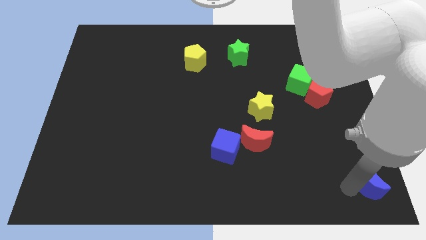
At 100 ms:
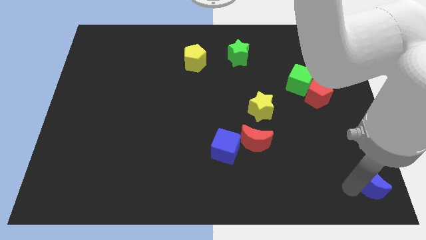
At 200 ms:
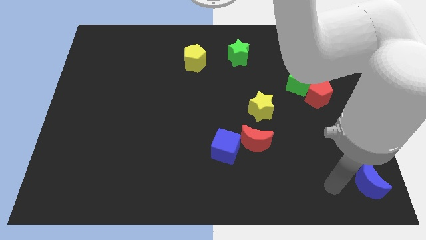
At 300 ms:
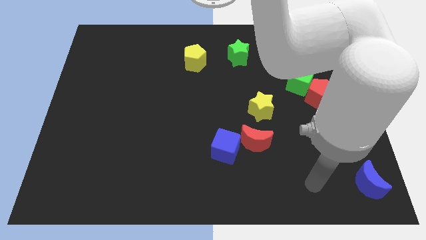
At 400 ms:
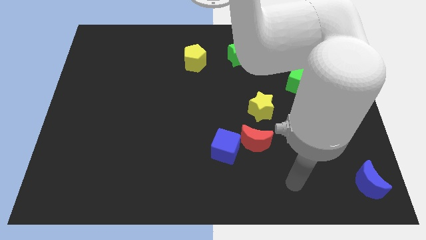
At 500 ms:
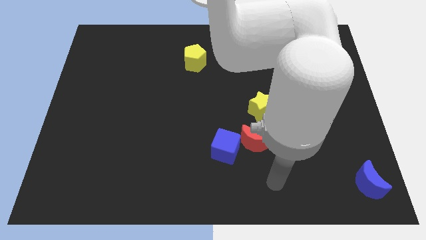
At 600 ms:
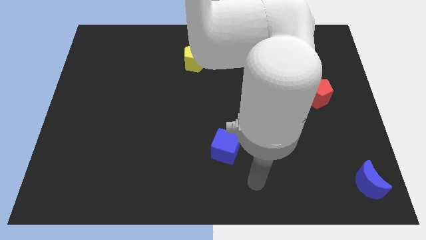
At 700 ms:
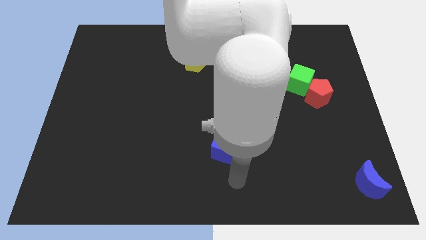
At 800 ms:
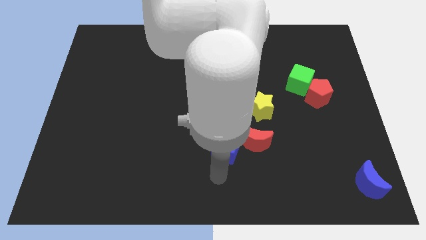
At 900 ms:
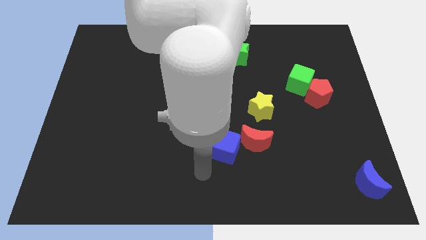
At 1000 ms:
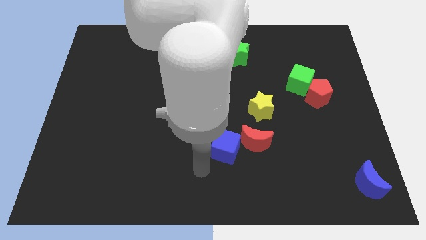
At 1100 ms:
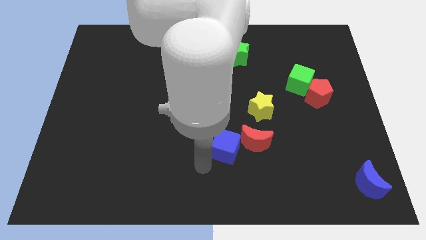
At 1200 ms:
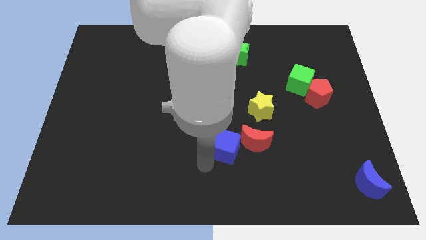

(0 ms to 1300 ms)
move your hand away from the blue moon

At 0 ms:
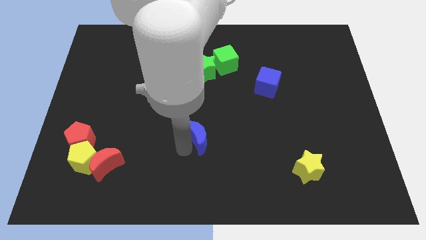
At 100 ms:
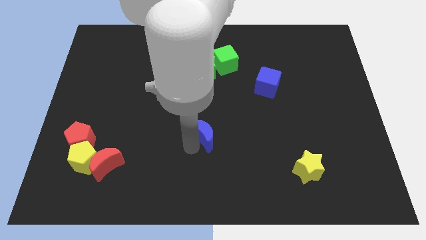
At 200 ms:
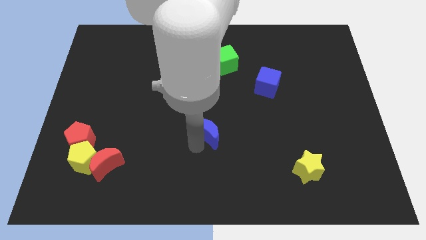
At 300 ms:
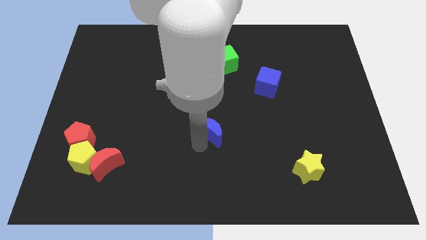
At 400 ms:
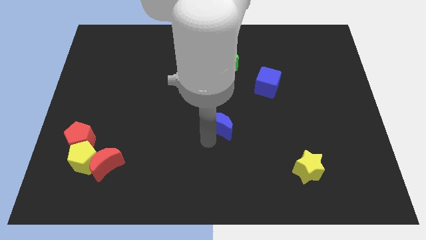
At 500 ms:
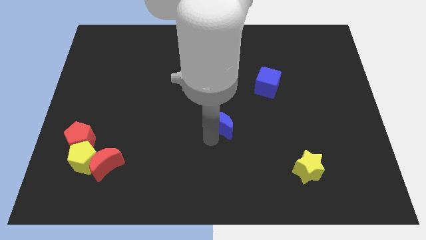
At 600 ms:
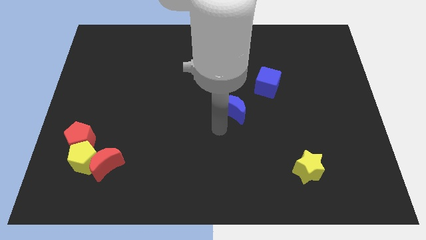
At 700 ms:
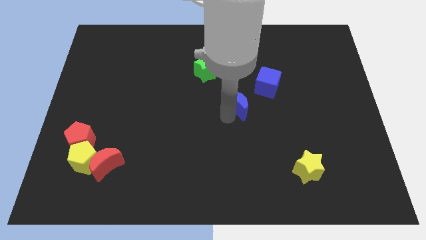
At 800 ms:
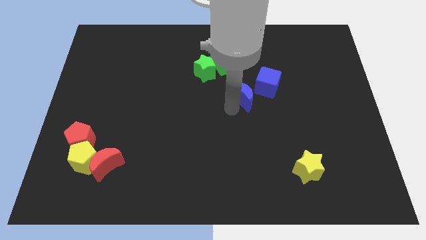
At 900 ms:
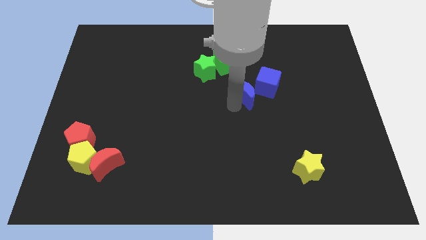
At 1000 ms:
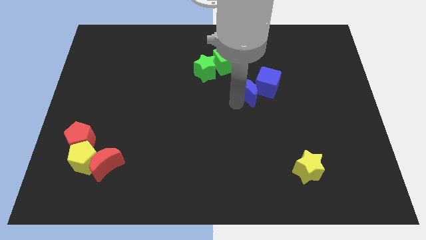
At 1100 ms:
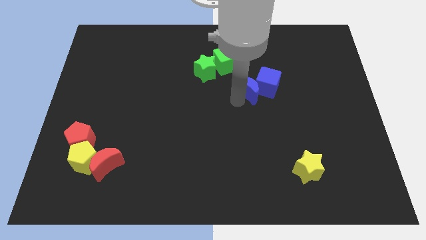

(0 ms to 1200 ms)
move blue moon close to the blue cube

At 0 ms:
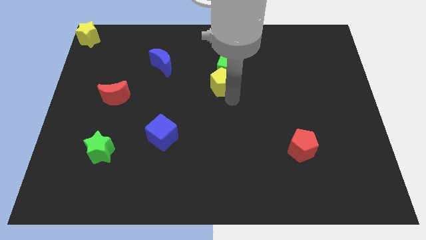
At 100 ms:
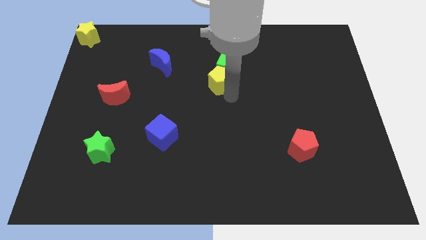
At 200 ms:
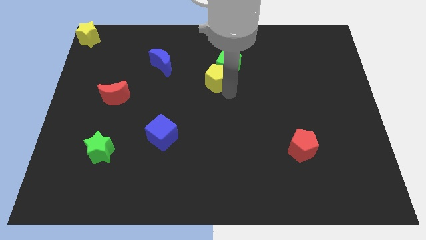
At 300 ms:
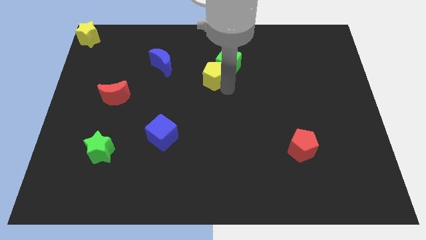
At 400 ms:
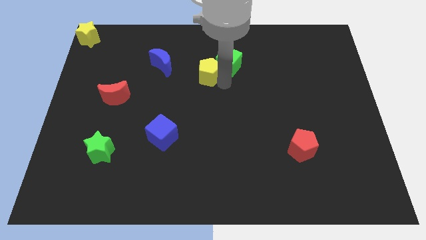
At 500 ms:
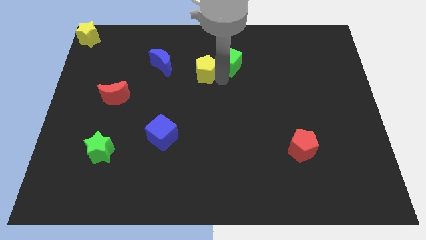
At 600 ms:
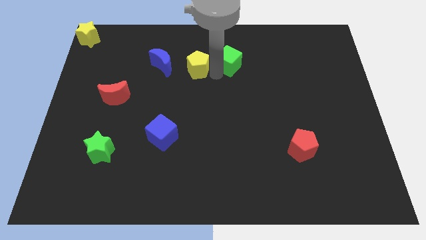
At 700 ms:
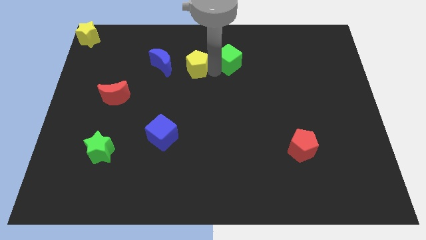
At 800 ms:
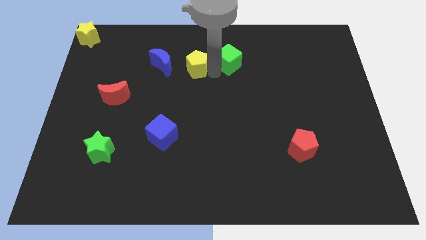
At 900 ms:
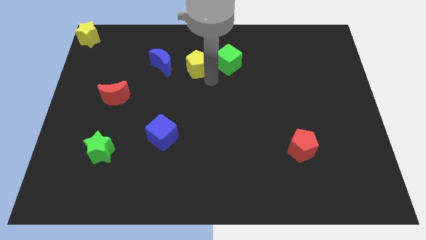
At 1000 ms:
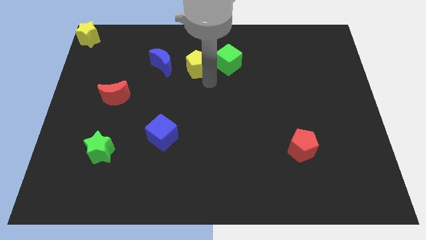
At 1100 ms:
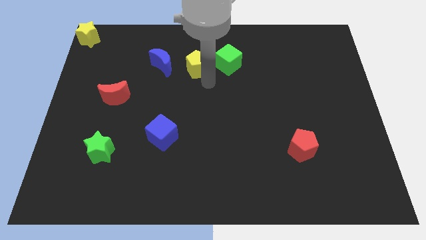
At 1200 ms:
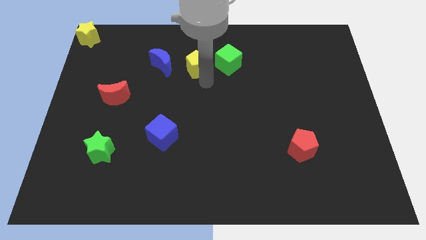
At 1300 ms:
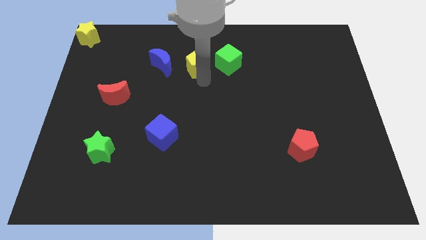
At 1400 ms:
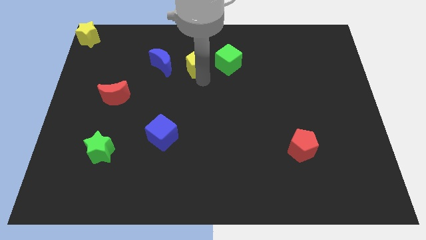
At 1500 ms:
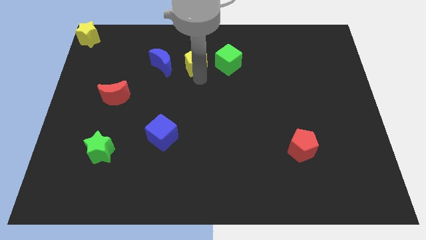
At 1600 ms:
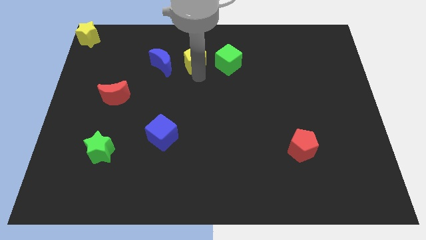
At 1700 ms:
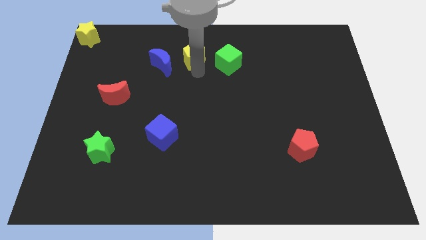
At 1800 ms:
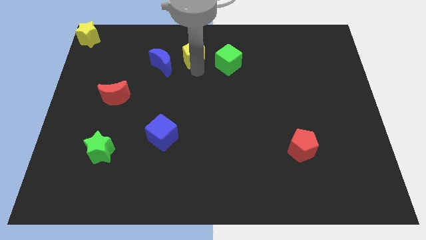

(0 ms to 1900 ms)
place the yellow pentagon in between the green cube and blue moon

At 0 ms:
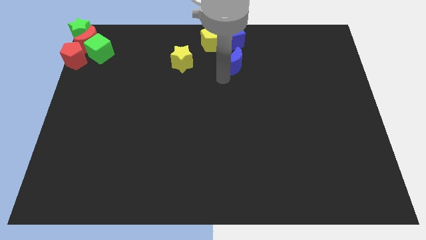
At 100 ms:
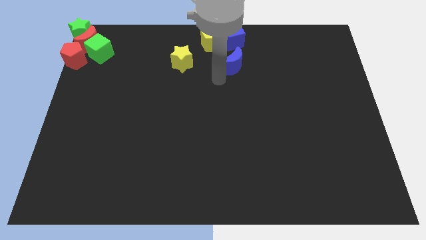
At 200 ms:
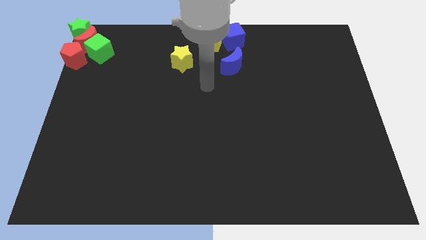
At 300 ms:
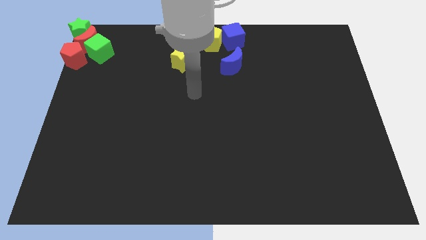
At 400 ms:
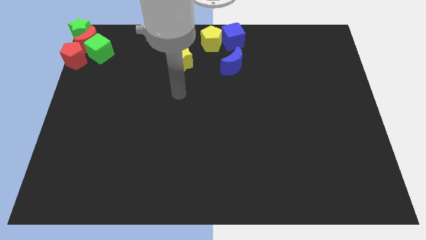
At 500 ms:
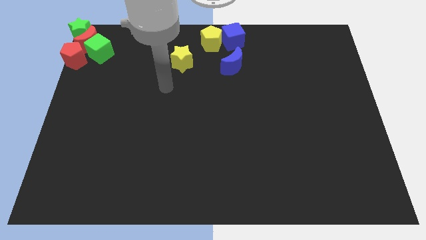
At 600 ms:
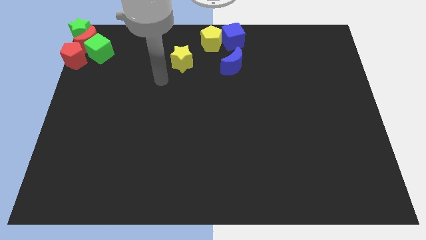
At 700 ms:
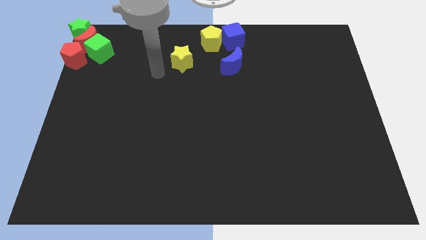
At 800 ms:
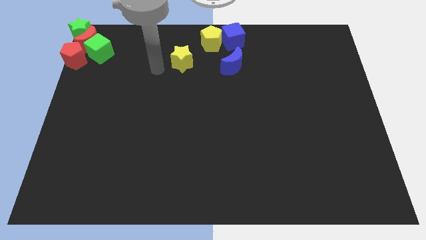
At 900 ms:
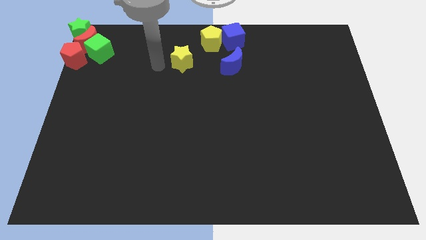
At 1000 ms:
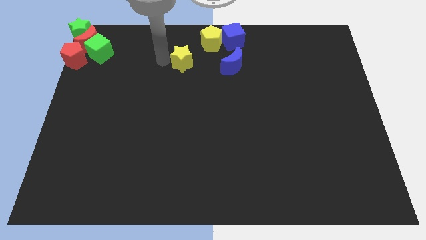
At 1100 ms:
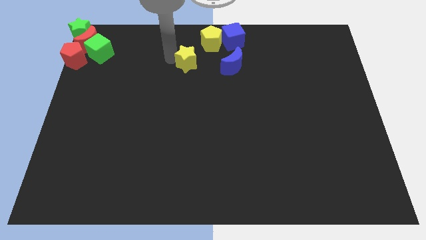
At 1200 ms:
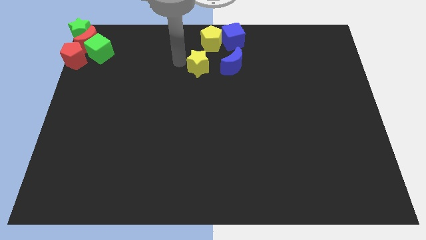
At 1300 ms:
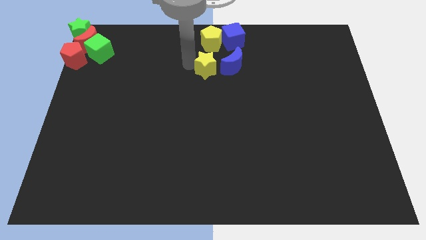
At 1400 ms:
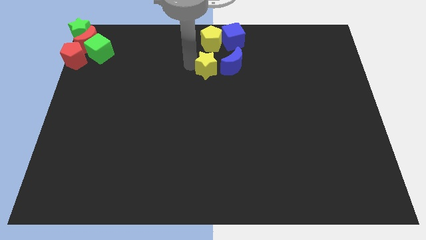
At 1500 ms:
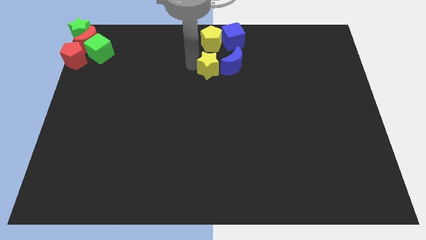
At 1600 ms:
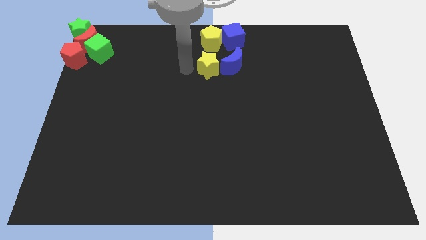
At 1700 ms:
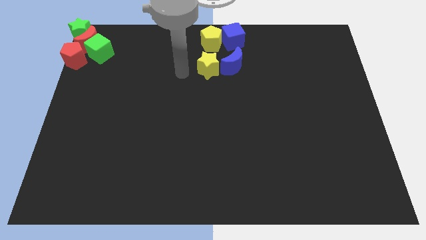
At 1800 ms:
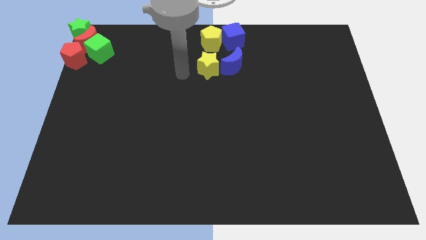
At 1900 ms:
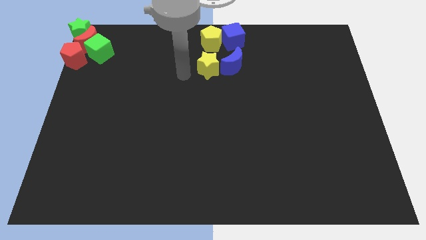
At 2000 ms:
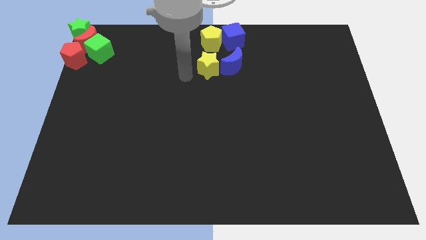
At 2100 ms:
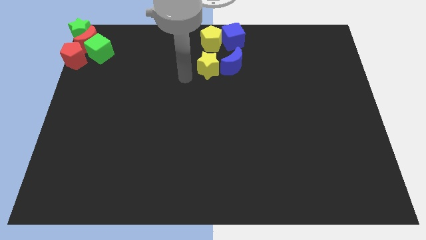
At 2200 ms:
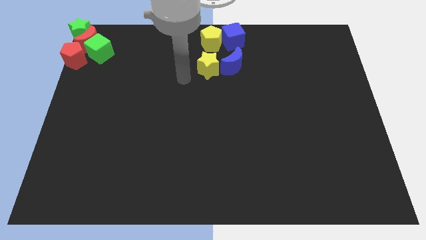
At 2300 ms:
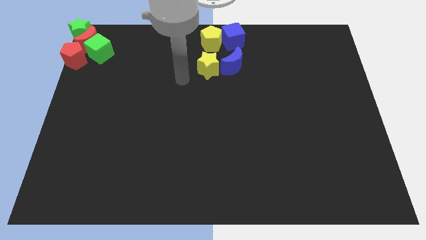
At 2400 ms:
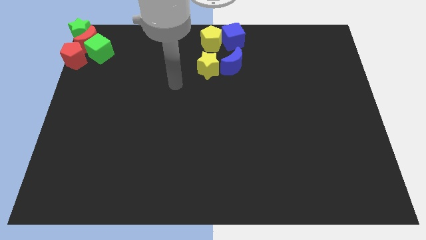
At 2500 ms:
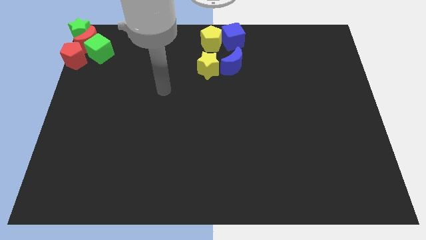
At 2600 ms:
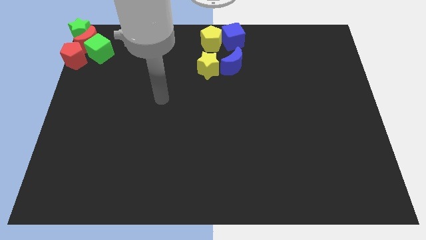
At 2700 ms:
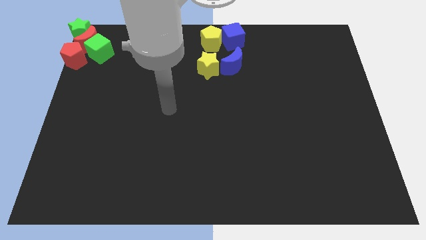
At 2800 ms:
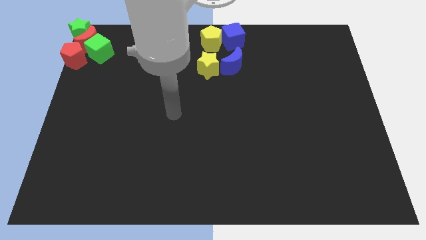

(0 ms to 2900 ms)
put the yellow star underneath the yellow pentagon

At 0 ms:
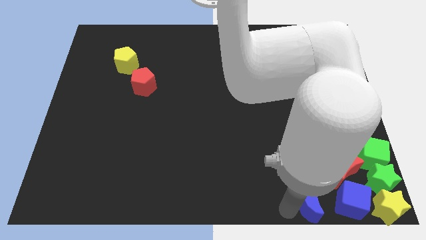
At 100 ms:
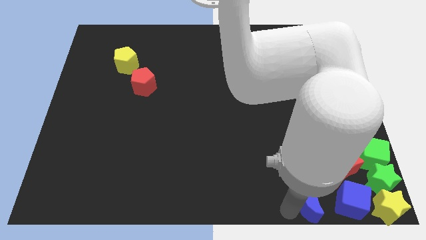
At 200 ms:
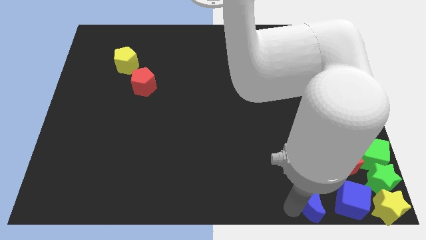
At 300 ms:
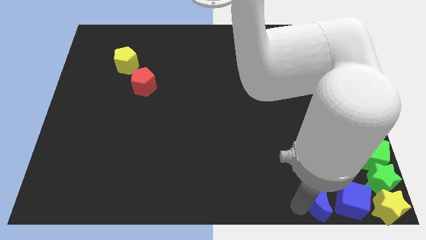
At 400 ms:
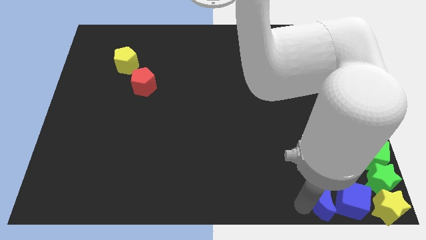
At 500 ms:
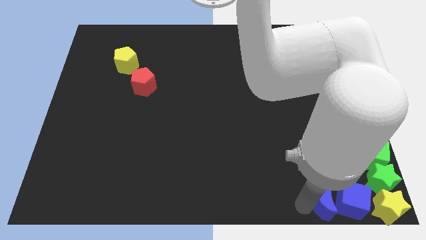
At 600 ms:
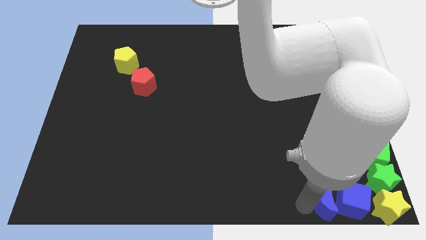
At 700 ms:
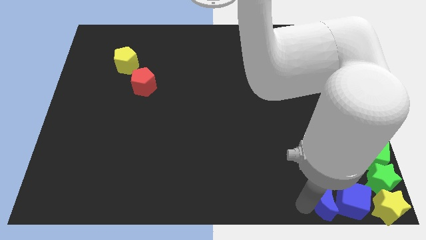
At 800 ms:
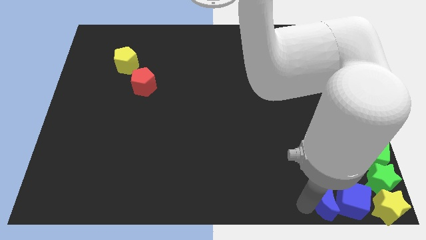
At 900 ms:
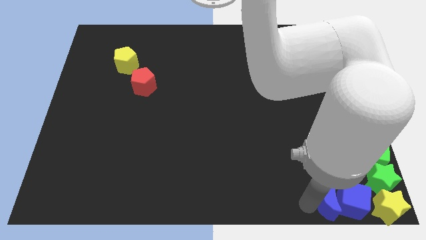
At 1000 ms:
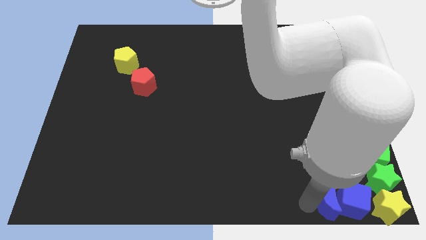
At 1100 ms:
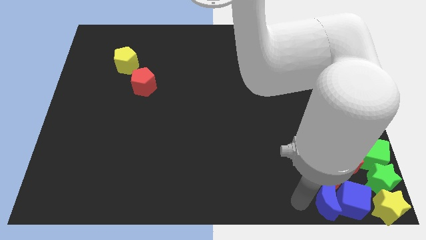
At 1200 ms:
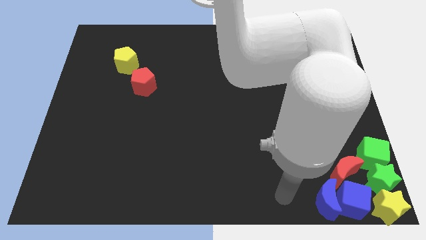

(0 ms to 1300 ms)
move the blue crescent close to the blue cube

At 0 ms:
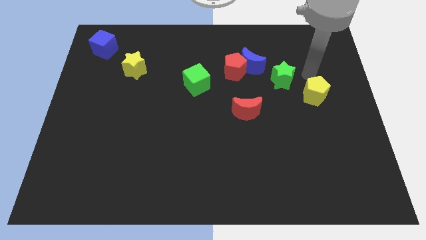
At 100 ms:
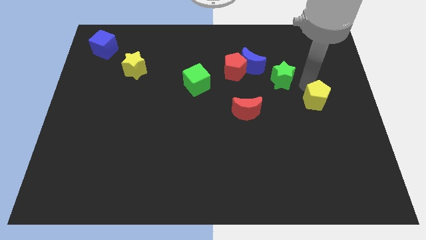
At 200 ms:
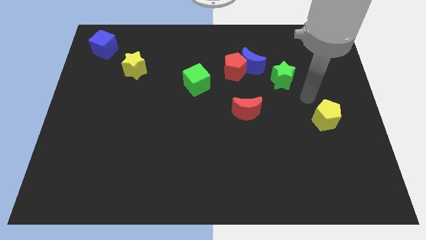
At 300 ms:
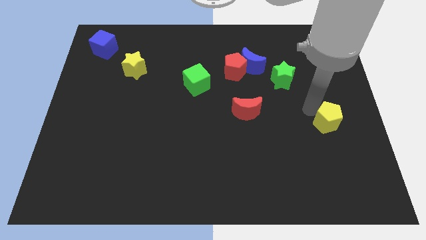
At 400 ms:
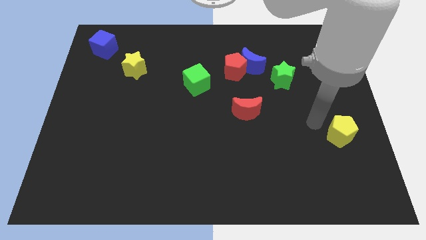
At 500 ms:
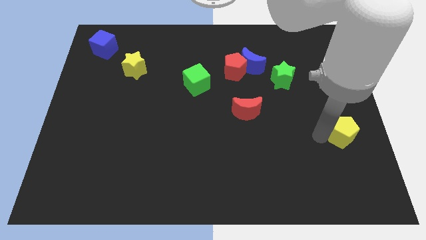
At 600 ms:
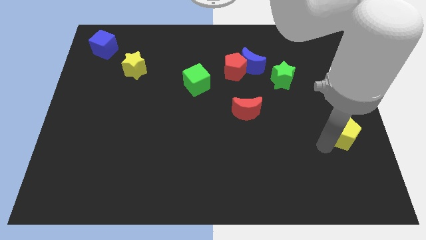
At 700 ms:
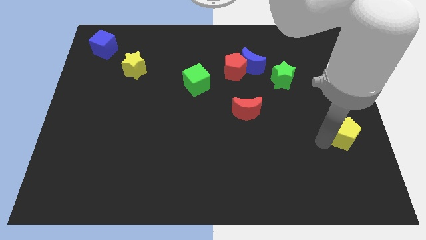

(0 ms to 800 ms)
push the yellow pentagon to the bottom of the board
